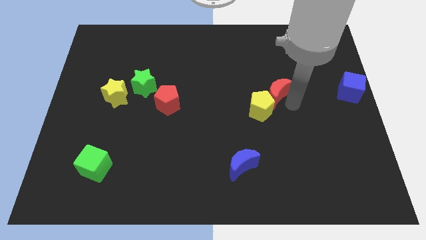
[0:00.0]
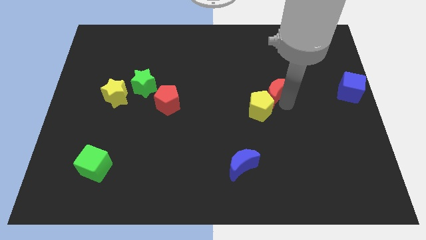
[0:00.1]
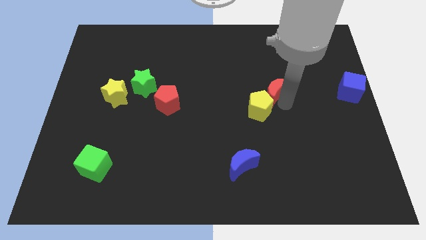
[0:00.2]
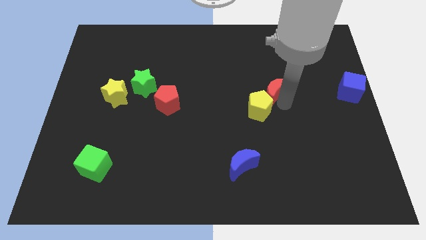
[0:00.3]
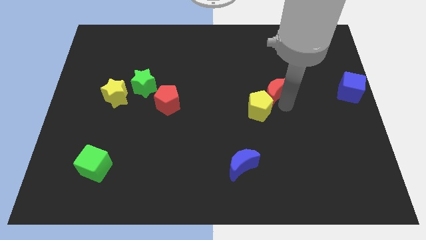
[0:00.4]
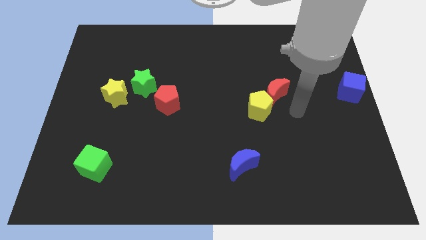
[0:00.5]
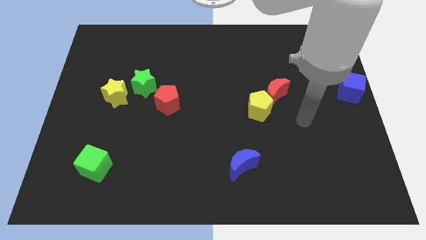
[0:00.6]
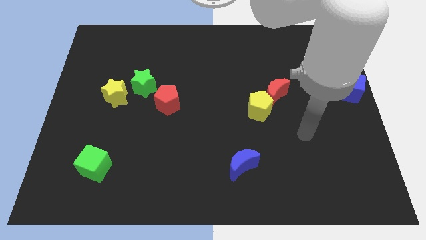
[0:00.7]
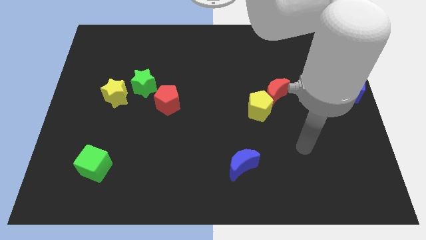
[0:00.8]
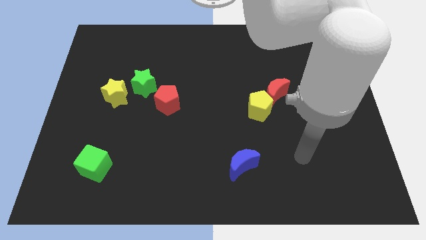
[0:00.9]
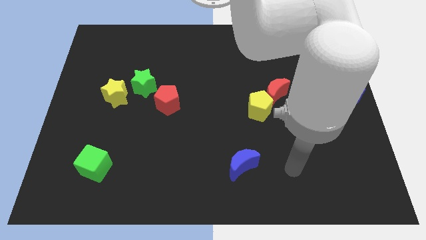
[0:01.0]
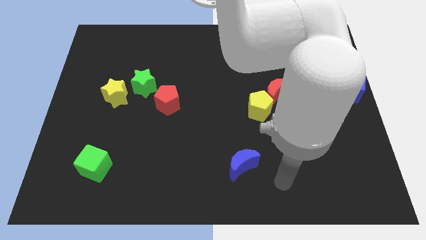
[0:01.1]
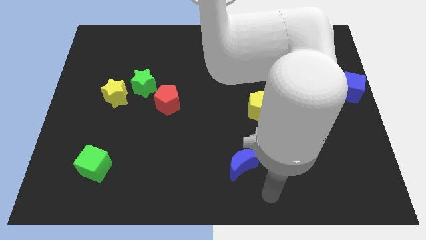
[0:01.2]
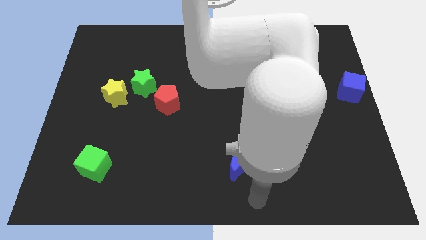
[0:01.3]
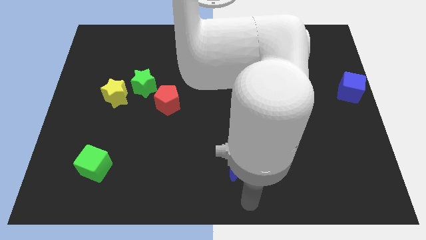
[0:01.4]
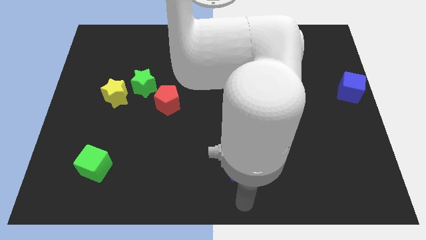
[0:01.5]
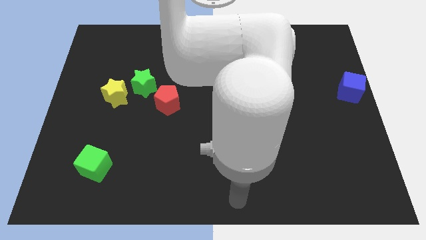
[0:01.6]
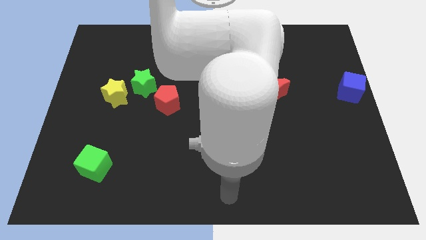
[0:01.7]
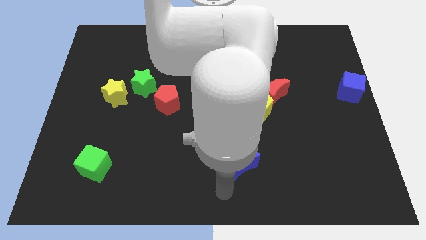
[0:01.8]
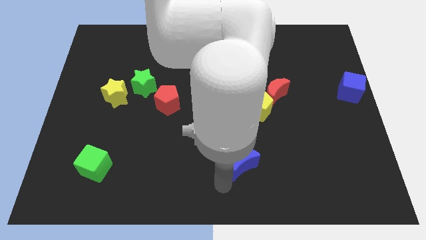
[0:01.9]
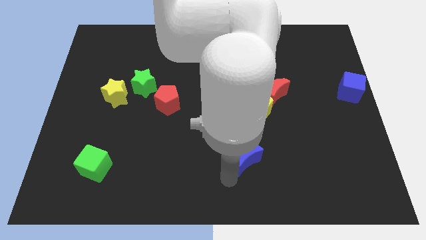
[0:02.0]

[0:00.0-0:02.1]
move your hand to the bottom of the blue crescent

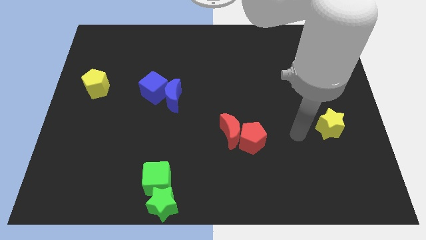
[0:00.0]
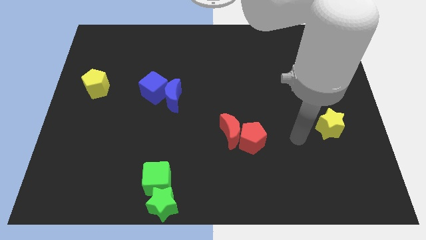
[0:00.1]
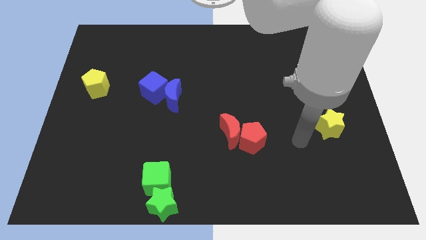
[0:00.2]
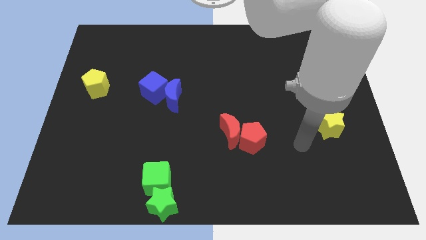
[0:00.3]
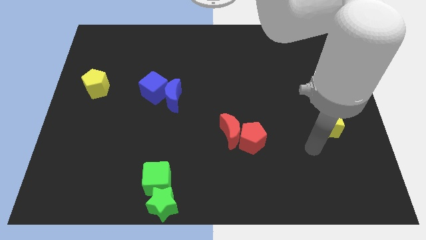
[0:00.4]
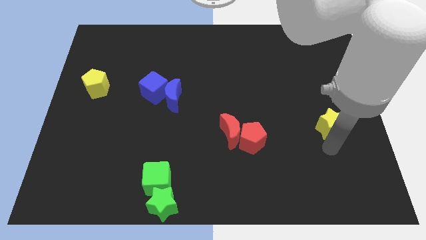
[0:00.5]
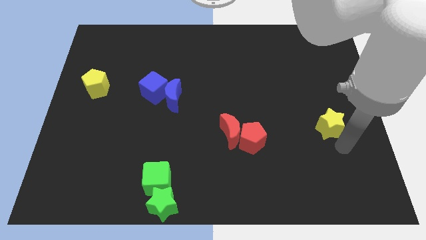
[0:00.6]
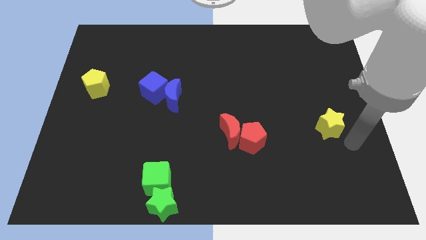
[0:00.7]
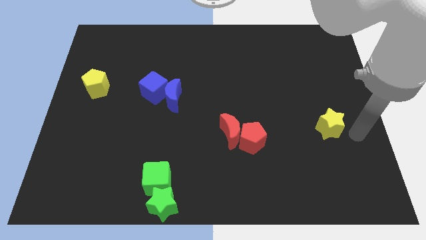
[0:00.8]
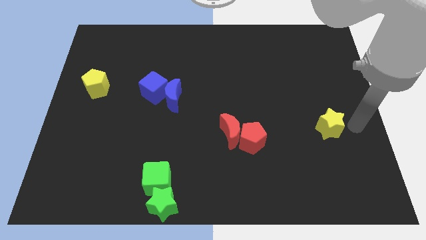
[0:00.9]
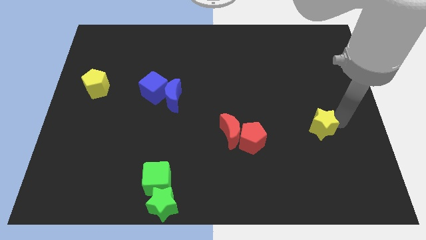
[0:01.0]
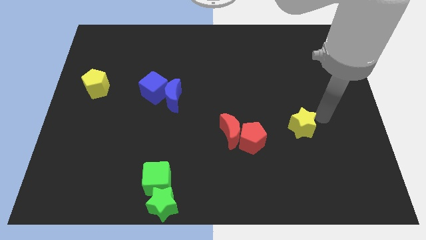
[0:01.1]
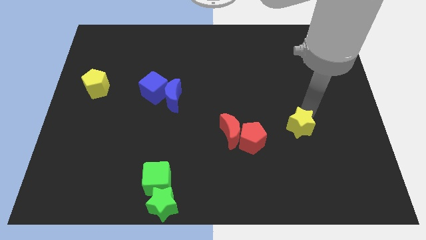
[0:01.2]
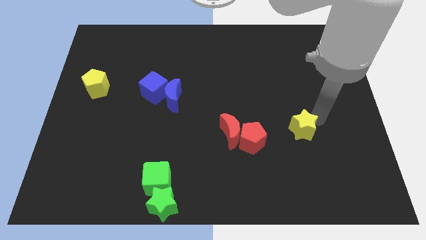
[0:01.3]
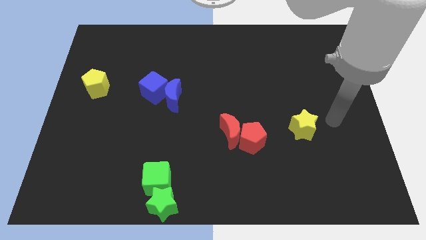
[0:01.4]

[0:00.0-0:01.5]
push the yellow star towards the red pentagon

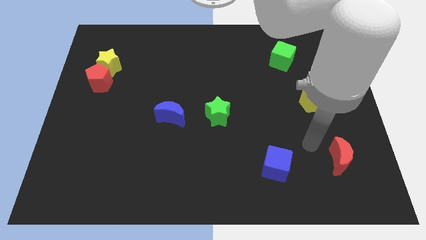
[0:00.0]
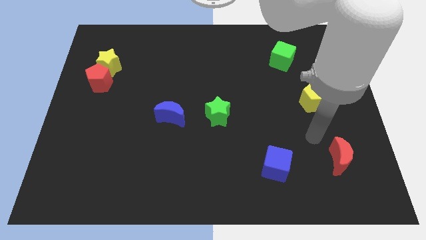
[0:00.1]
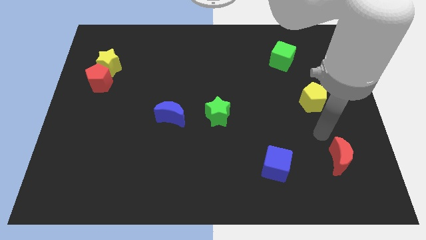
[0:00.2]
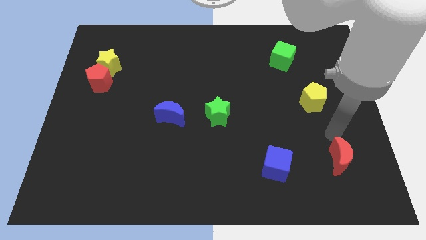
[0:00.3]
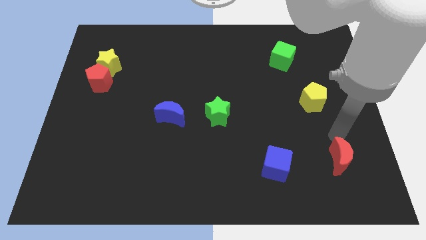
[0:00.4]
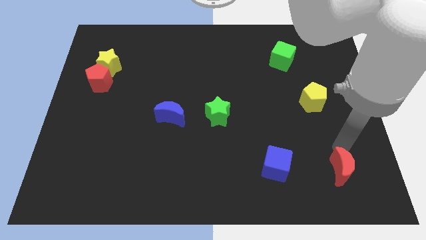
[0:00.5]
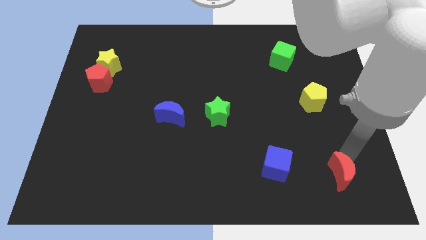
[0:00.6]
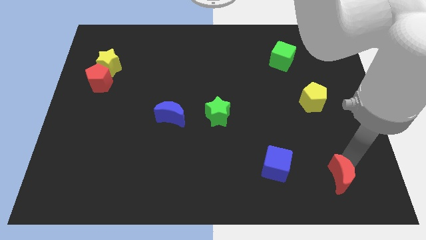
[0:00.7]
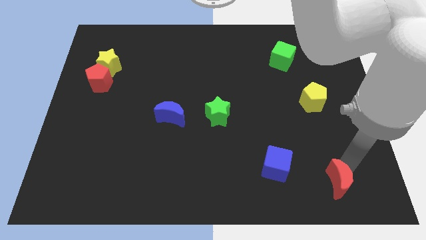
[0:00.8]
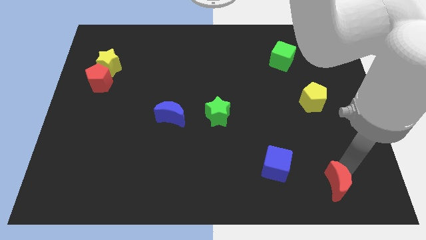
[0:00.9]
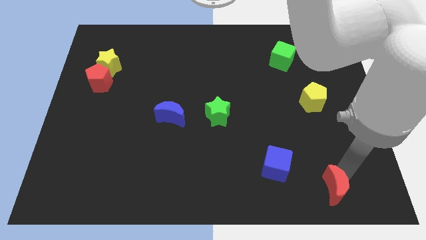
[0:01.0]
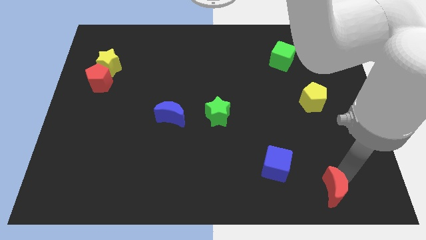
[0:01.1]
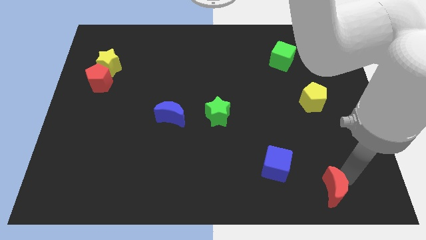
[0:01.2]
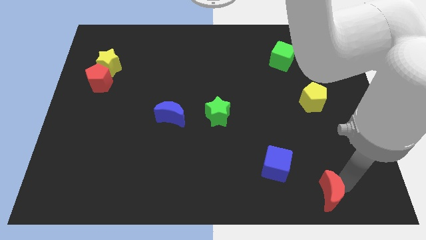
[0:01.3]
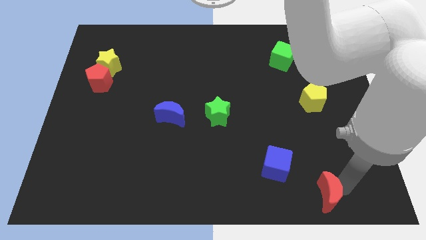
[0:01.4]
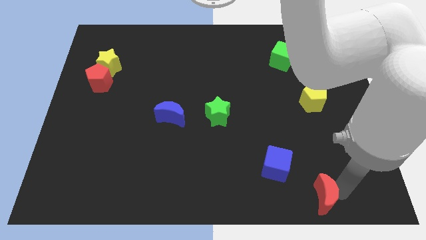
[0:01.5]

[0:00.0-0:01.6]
push red moon towards the bottom side of the board

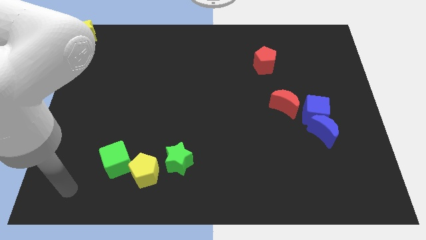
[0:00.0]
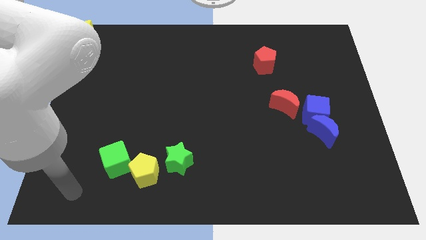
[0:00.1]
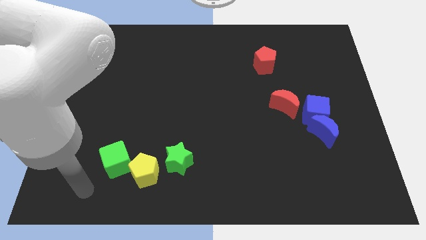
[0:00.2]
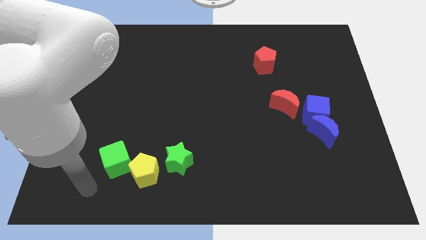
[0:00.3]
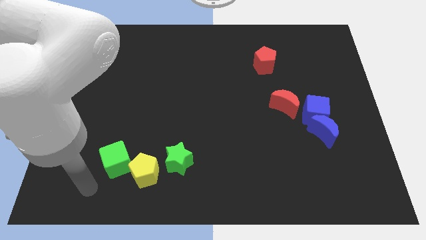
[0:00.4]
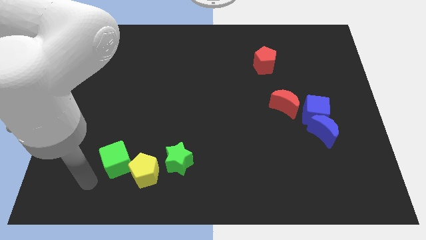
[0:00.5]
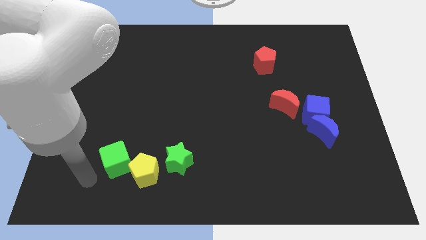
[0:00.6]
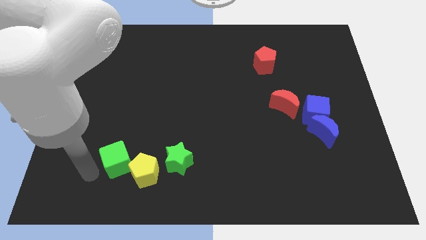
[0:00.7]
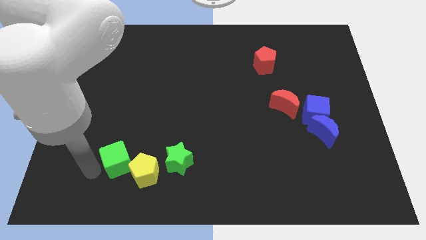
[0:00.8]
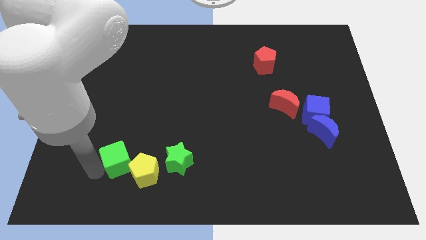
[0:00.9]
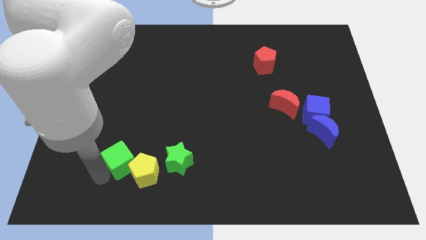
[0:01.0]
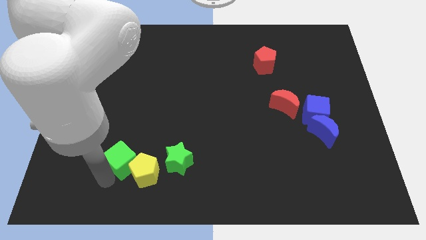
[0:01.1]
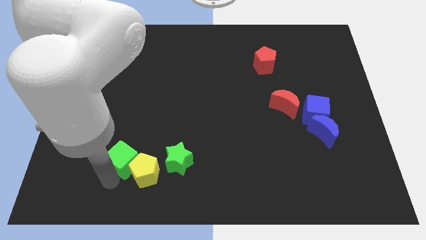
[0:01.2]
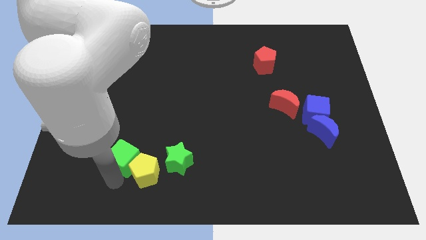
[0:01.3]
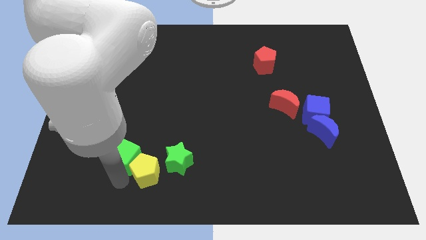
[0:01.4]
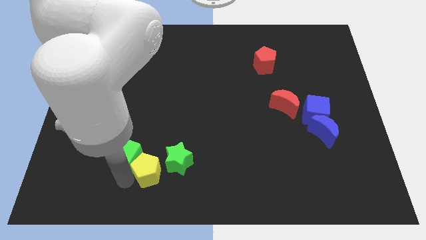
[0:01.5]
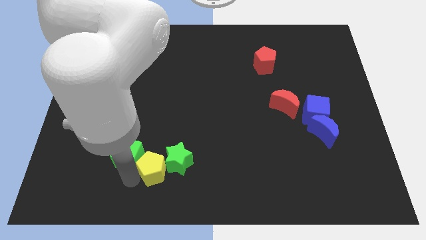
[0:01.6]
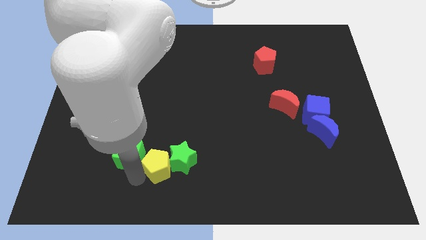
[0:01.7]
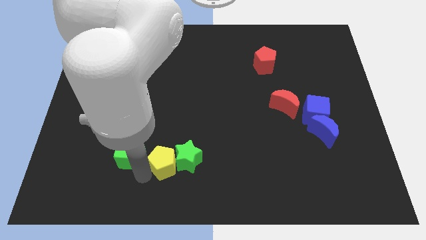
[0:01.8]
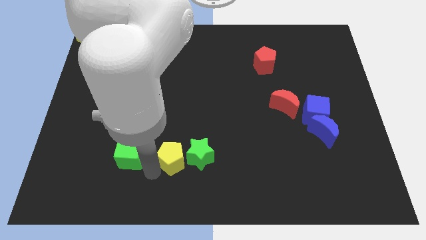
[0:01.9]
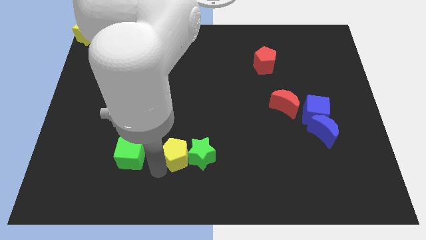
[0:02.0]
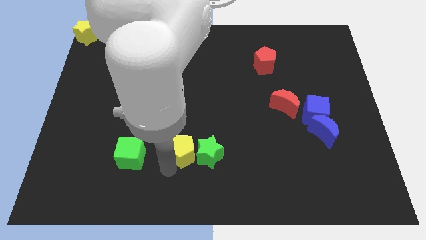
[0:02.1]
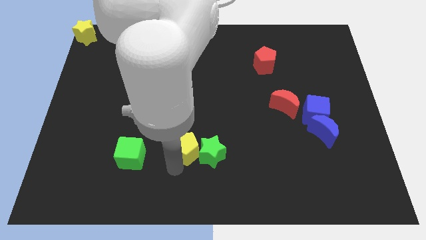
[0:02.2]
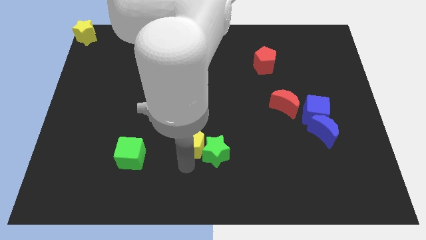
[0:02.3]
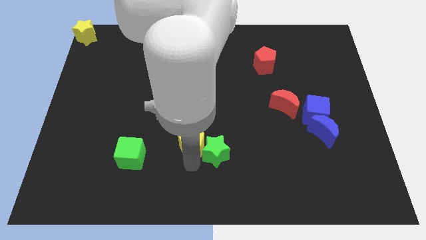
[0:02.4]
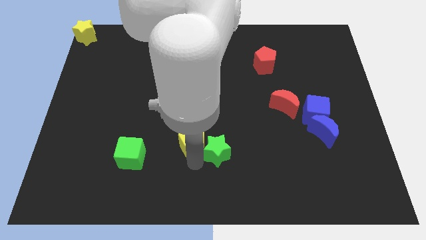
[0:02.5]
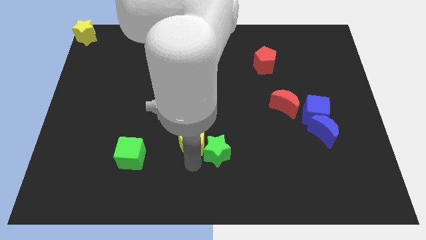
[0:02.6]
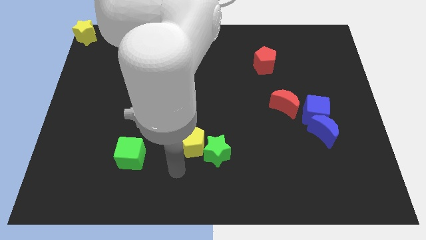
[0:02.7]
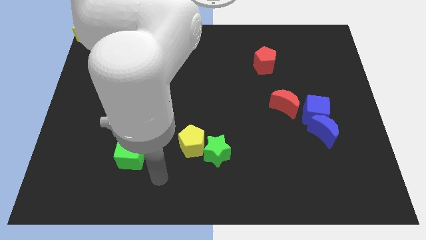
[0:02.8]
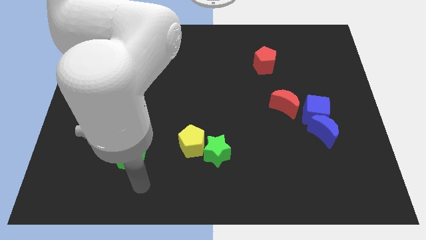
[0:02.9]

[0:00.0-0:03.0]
seperate the yellow pentagon and green star away from the green cube

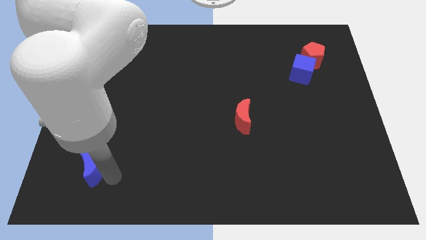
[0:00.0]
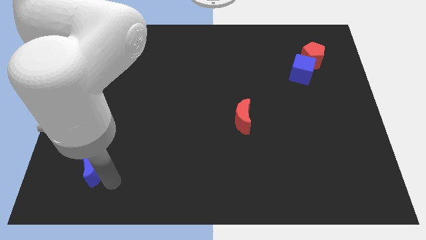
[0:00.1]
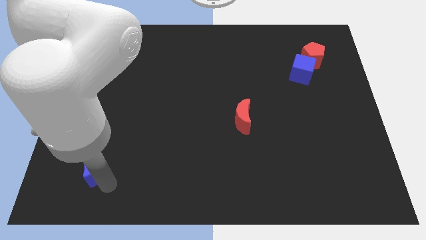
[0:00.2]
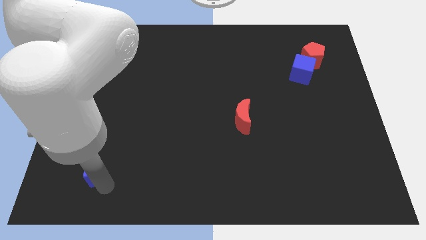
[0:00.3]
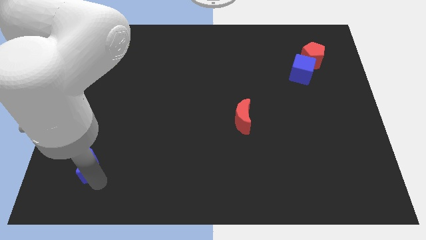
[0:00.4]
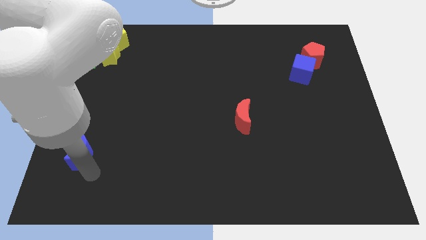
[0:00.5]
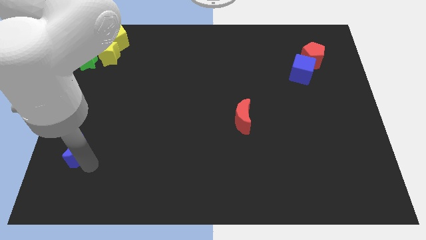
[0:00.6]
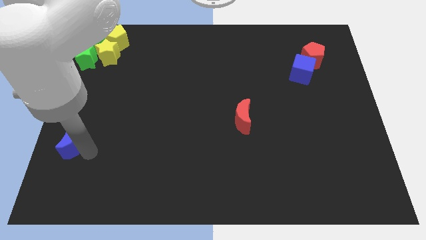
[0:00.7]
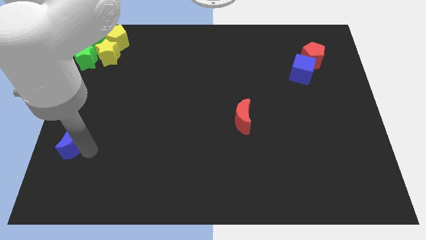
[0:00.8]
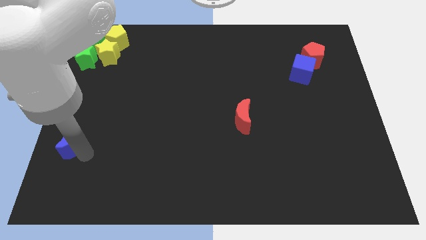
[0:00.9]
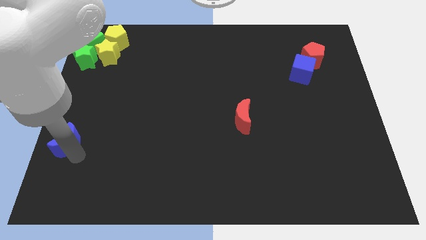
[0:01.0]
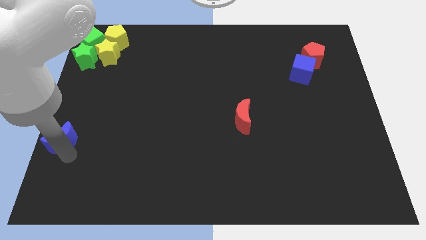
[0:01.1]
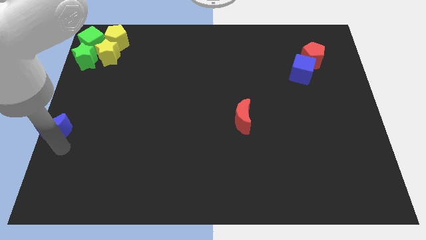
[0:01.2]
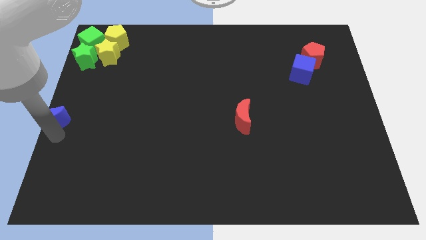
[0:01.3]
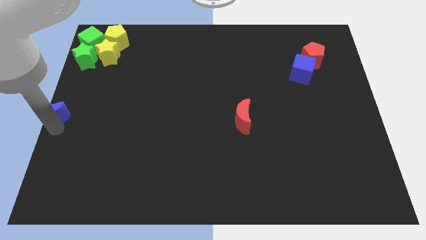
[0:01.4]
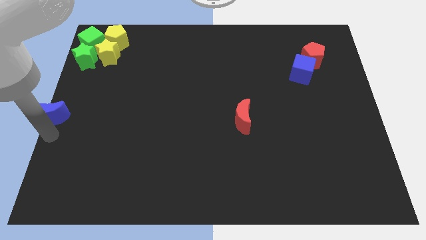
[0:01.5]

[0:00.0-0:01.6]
push the blue crescent to the top
